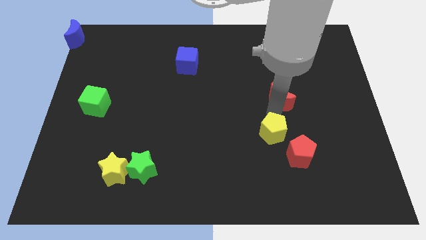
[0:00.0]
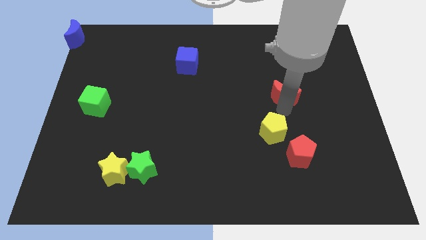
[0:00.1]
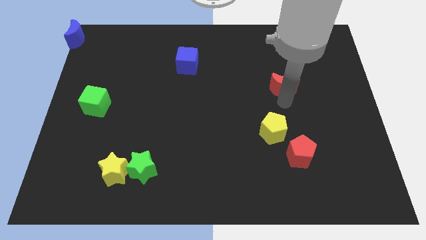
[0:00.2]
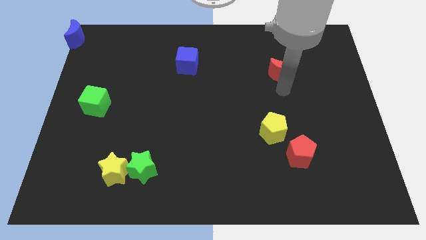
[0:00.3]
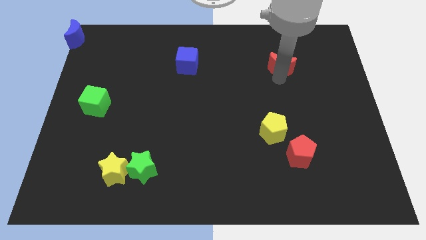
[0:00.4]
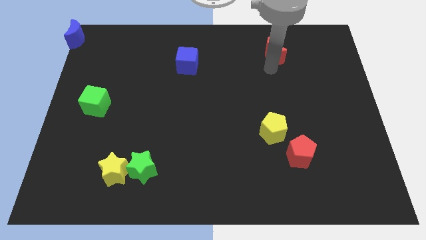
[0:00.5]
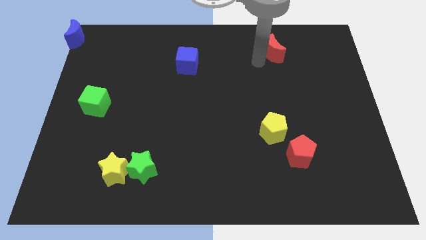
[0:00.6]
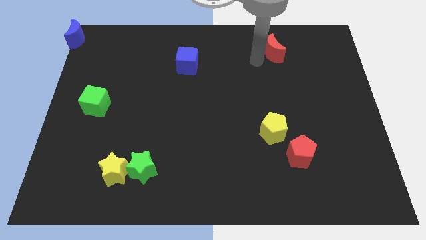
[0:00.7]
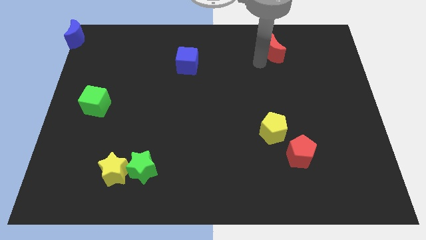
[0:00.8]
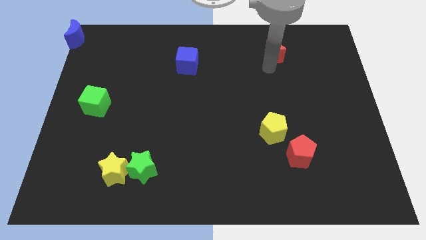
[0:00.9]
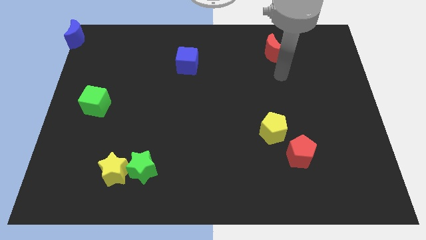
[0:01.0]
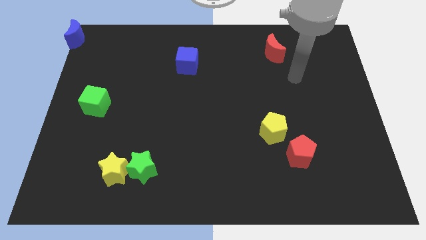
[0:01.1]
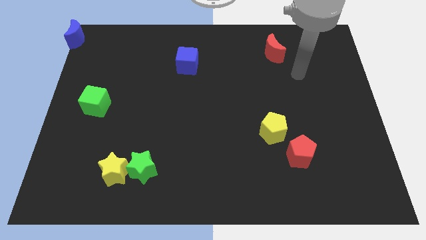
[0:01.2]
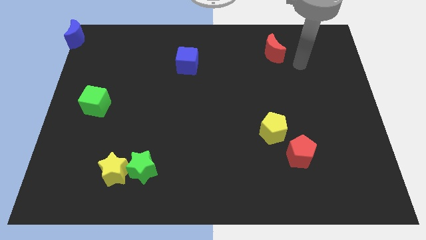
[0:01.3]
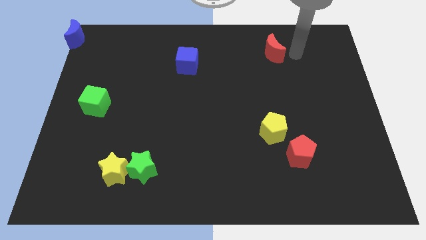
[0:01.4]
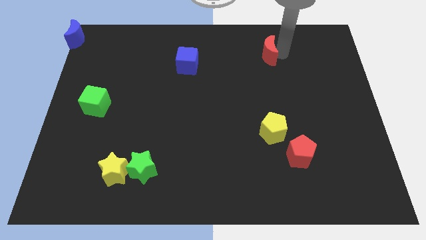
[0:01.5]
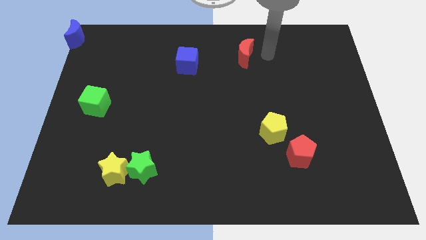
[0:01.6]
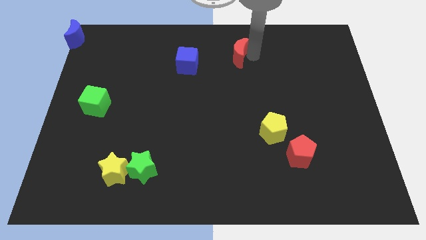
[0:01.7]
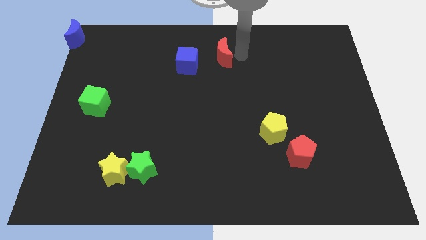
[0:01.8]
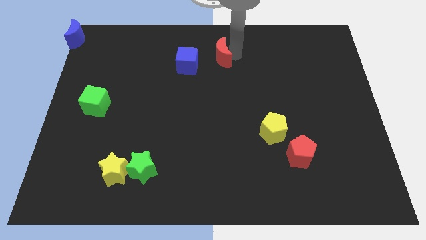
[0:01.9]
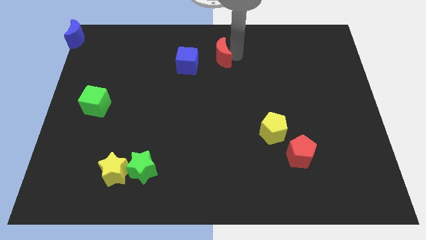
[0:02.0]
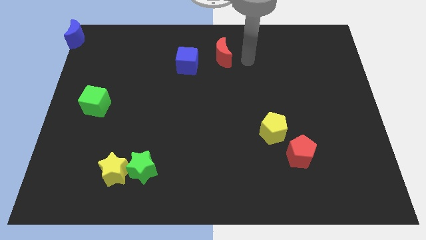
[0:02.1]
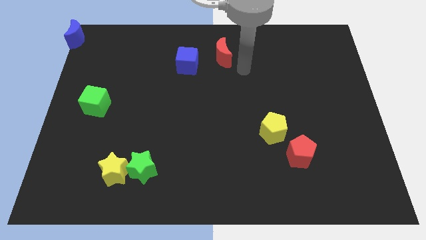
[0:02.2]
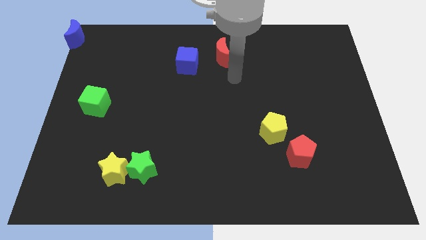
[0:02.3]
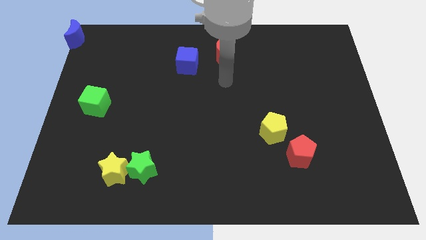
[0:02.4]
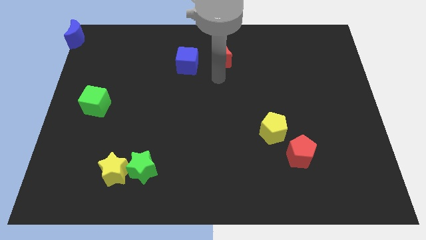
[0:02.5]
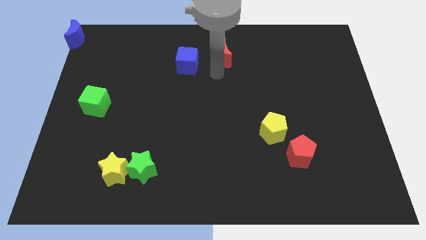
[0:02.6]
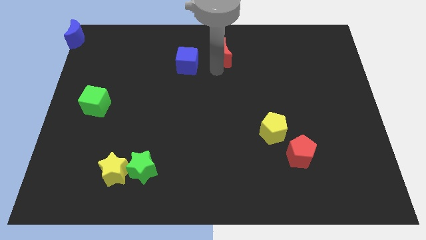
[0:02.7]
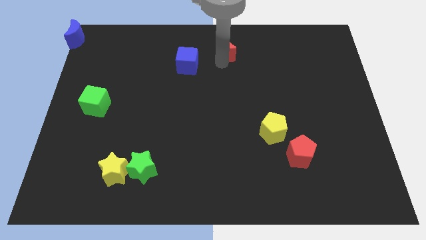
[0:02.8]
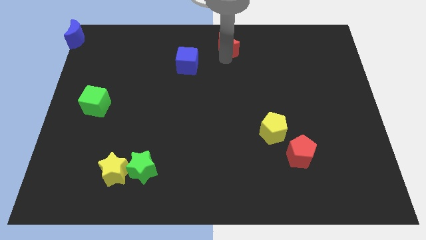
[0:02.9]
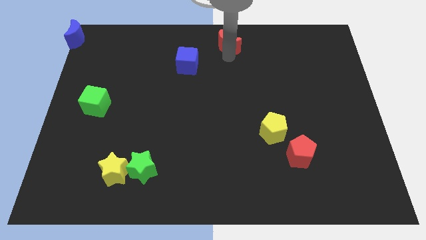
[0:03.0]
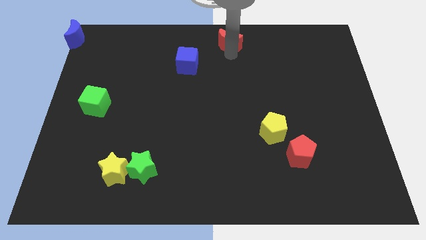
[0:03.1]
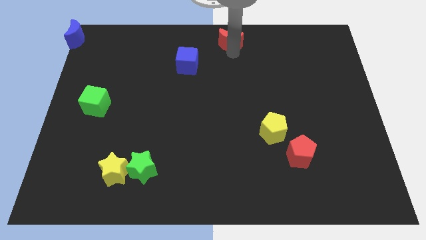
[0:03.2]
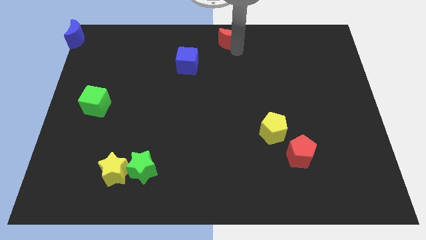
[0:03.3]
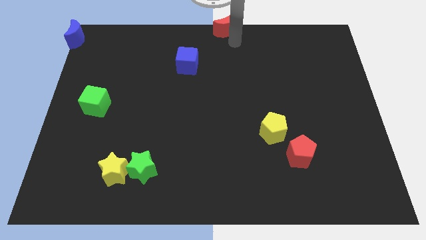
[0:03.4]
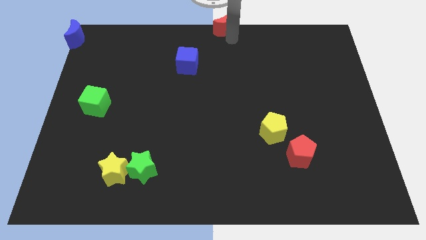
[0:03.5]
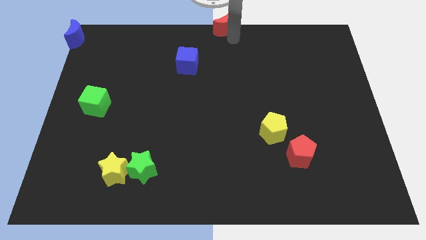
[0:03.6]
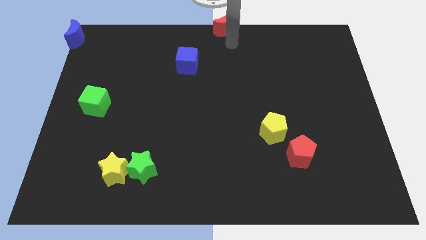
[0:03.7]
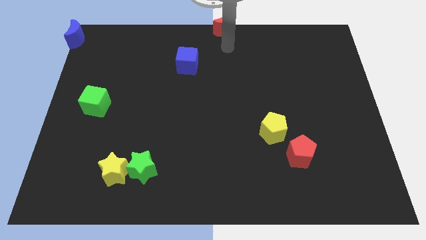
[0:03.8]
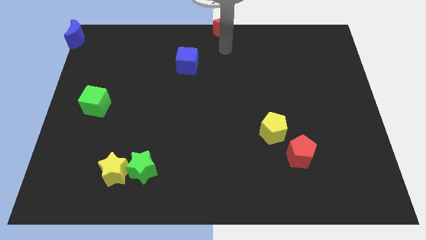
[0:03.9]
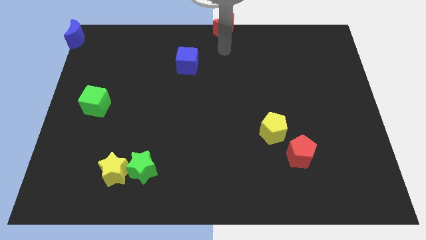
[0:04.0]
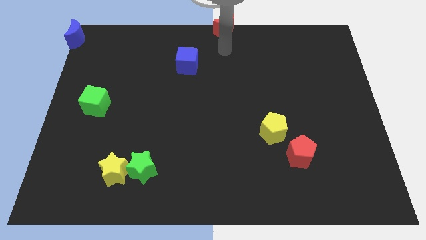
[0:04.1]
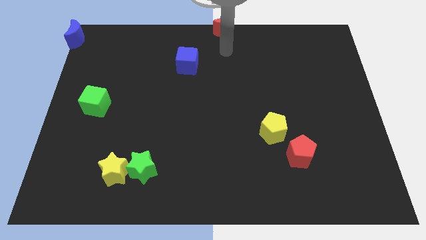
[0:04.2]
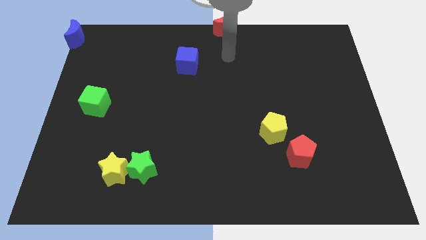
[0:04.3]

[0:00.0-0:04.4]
move the red crescent to the top center of the board

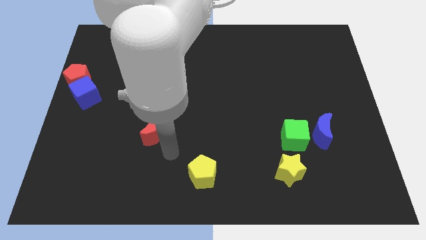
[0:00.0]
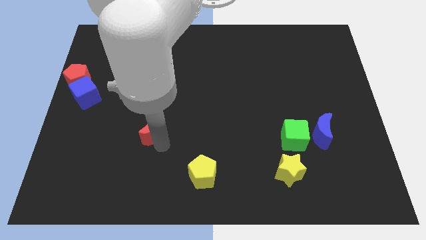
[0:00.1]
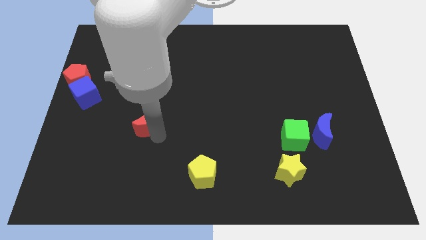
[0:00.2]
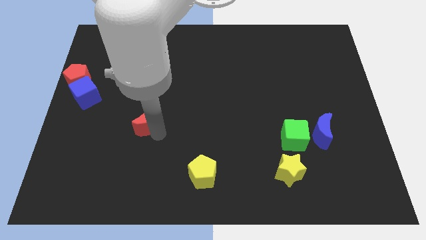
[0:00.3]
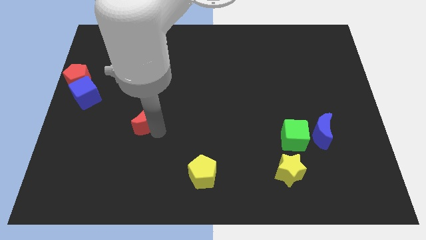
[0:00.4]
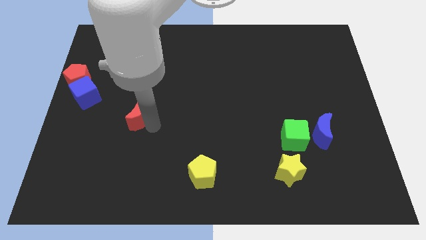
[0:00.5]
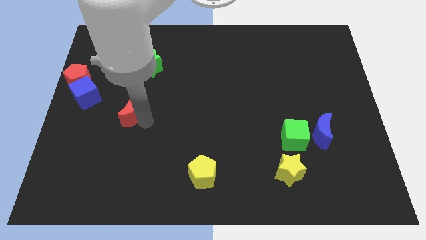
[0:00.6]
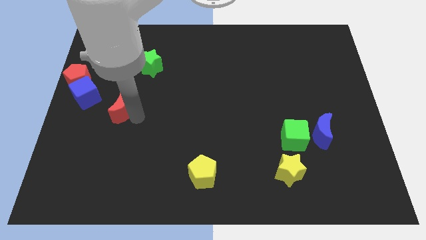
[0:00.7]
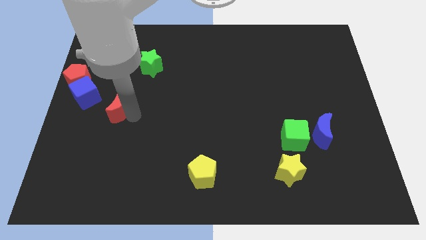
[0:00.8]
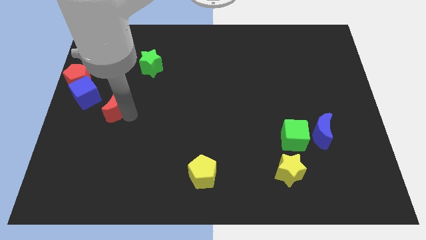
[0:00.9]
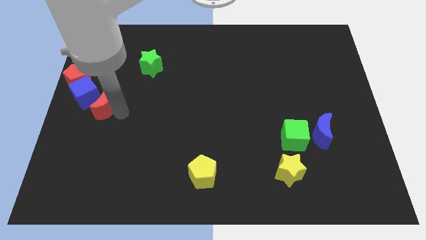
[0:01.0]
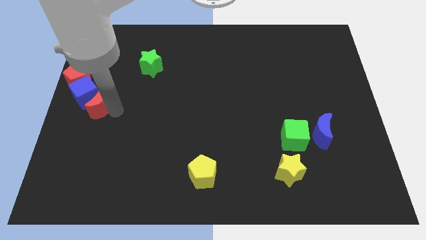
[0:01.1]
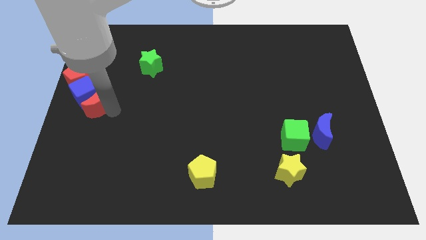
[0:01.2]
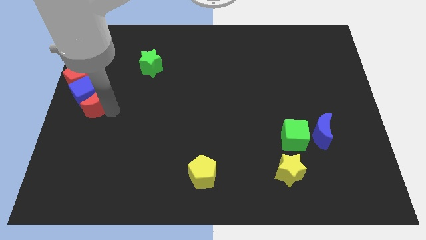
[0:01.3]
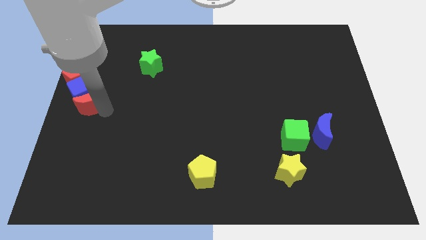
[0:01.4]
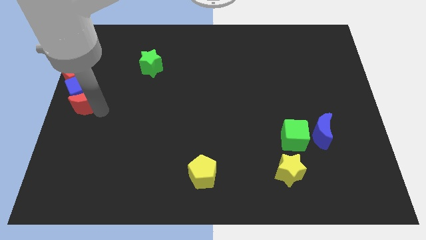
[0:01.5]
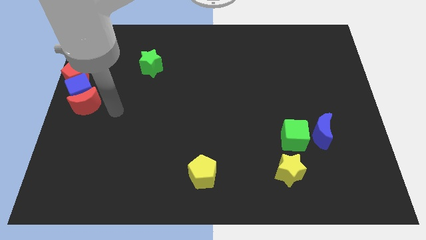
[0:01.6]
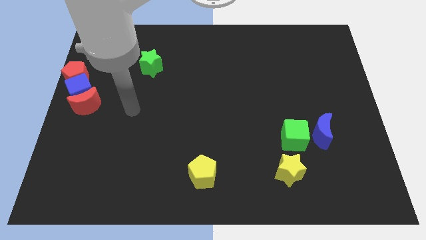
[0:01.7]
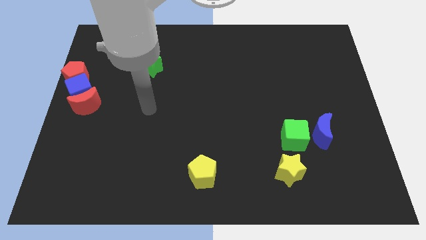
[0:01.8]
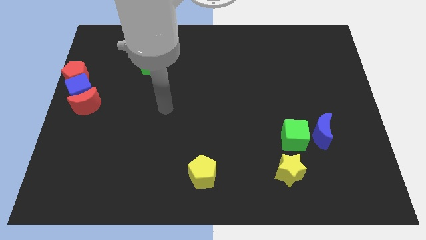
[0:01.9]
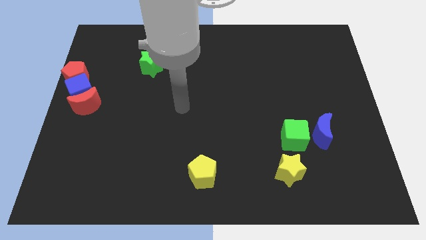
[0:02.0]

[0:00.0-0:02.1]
move the red crescent to the bottom of the blue cube

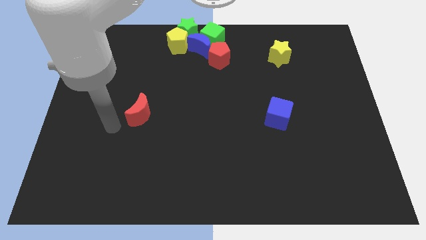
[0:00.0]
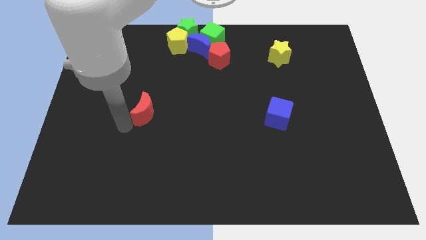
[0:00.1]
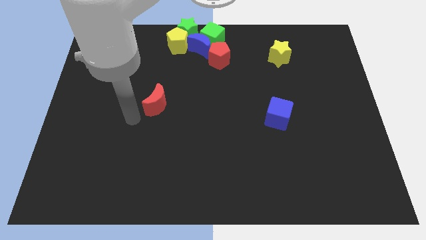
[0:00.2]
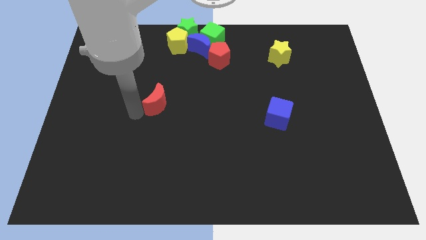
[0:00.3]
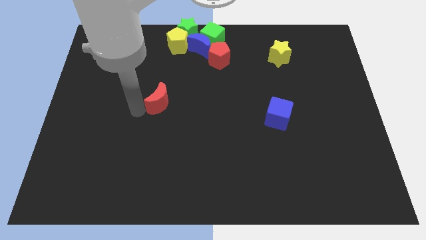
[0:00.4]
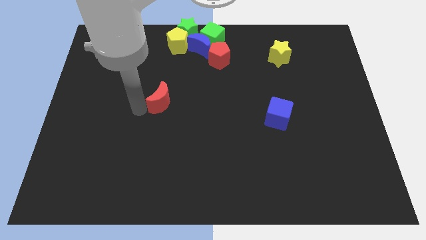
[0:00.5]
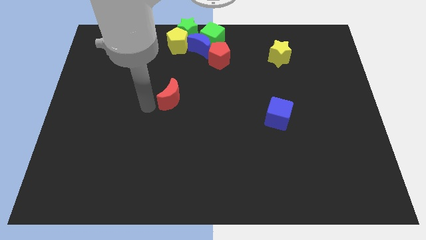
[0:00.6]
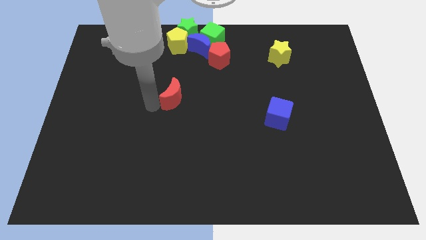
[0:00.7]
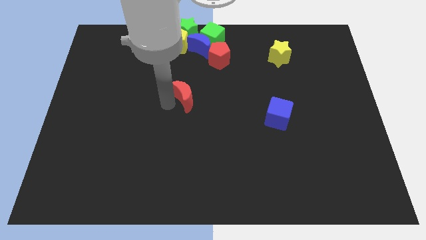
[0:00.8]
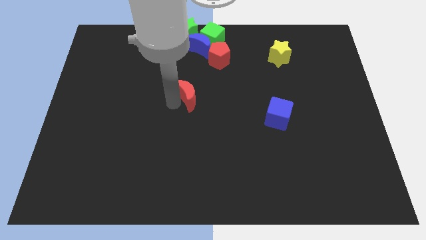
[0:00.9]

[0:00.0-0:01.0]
move red moon to the center of the board

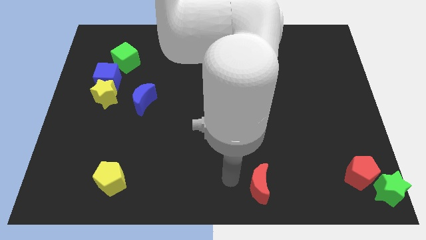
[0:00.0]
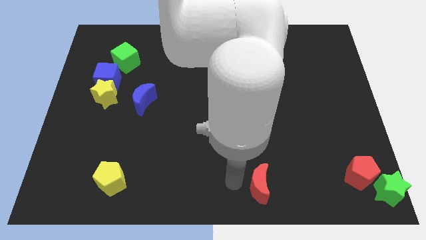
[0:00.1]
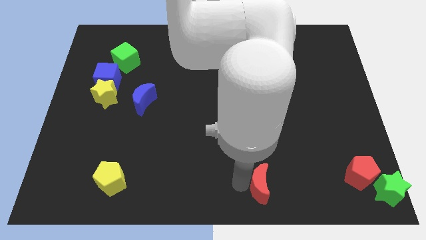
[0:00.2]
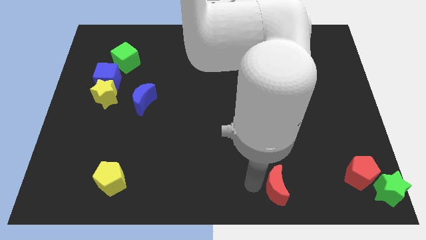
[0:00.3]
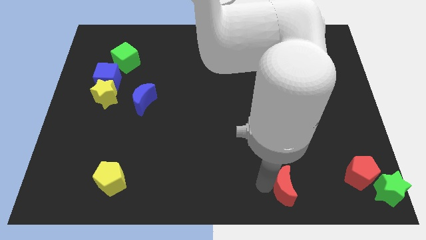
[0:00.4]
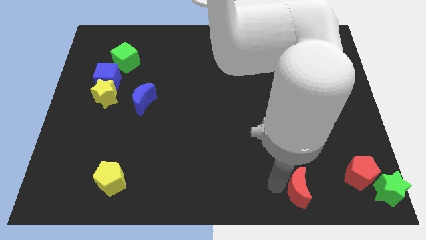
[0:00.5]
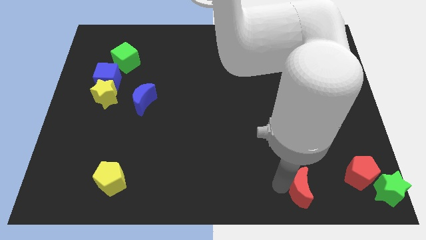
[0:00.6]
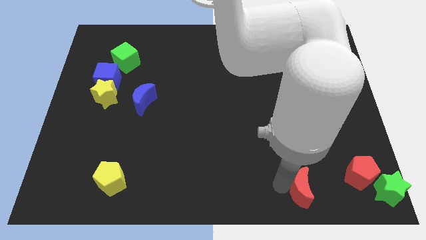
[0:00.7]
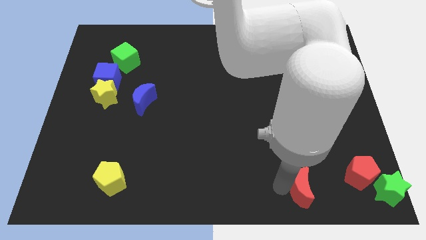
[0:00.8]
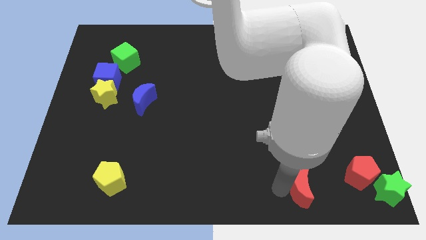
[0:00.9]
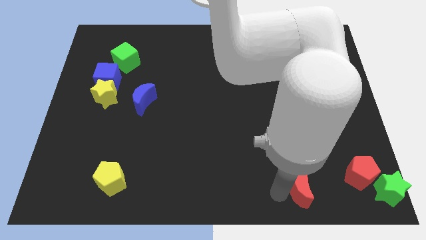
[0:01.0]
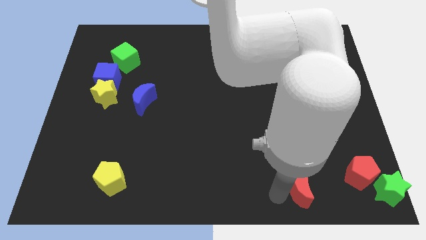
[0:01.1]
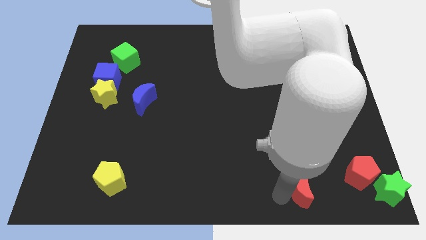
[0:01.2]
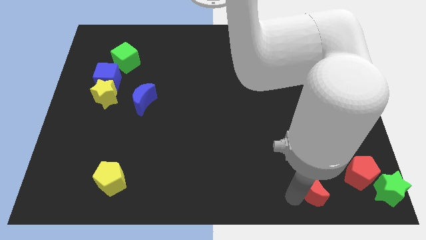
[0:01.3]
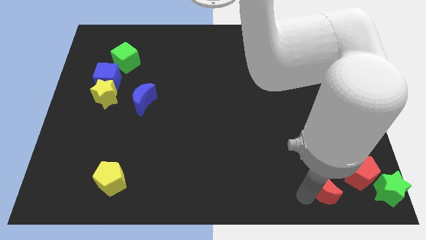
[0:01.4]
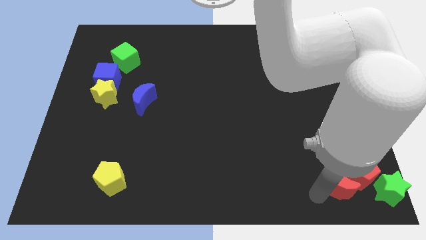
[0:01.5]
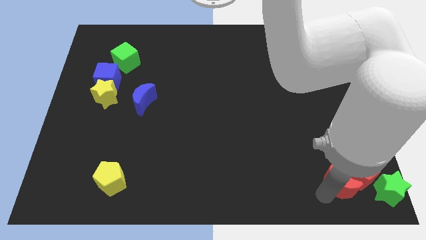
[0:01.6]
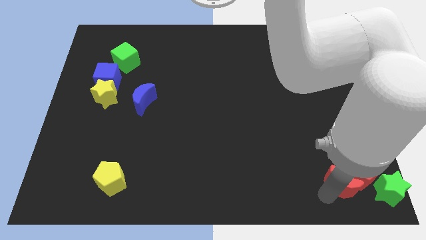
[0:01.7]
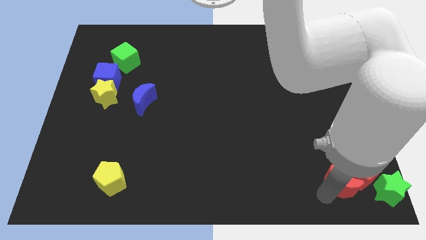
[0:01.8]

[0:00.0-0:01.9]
move the red crescent into the red pentagon
